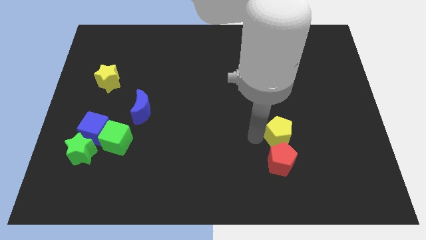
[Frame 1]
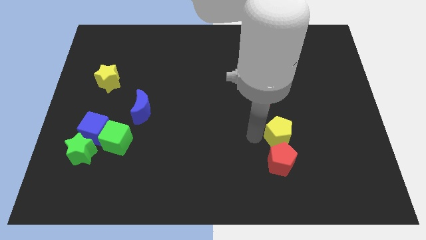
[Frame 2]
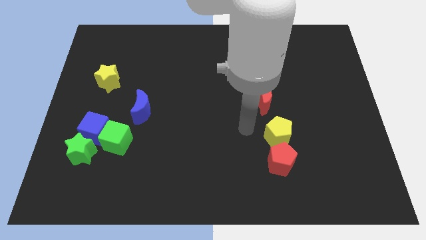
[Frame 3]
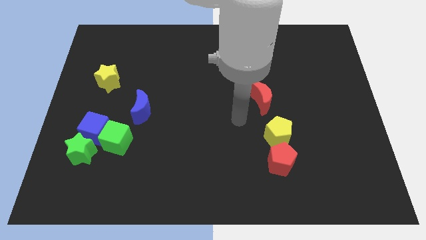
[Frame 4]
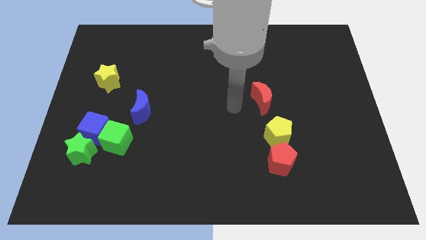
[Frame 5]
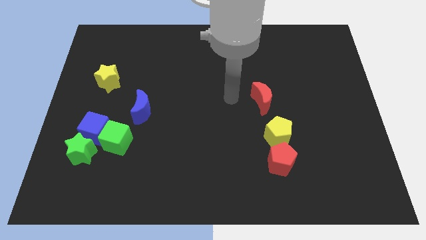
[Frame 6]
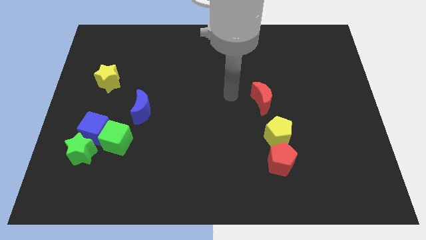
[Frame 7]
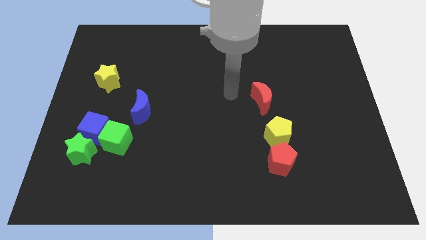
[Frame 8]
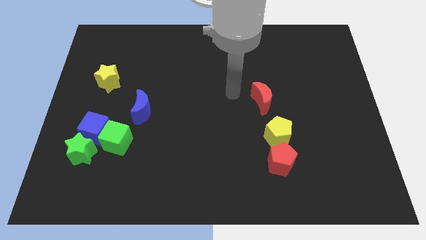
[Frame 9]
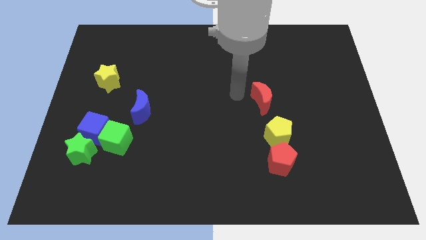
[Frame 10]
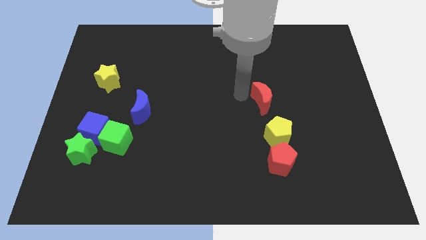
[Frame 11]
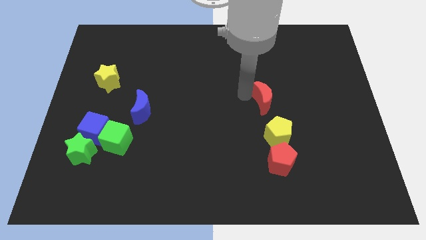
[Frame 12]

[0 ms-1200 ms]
move your arm towards red crescent

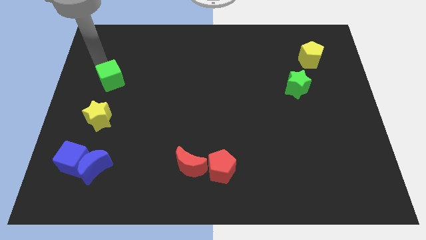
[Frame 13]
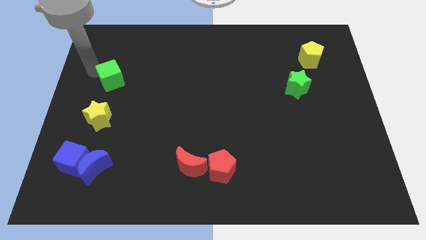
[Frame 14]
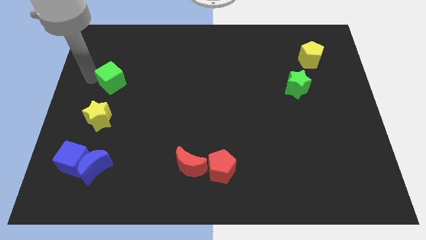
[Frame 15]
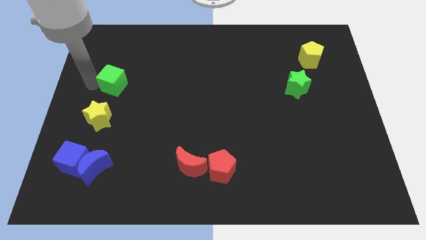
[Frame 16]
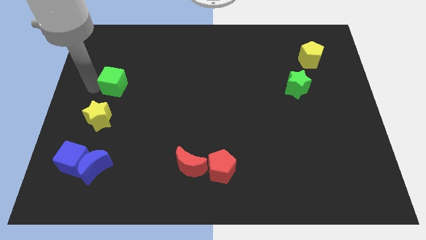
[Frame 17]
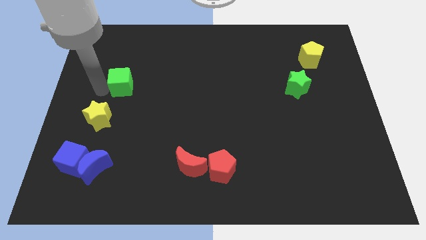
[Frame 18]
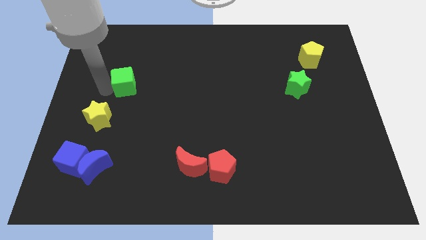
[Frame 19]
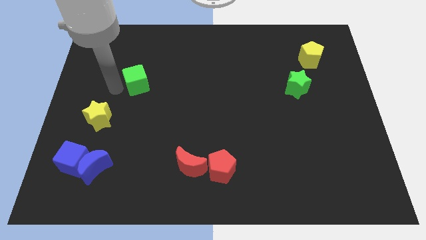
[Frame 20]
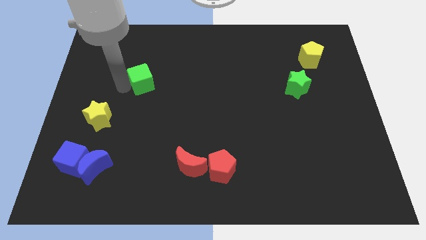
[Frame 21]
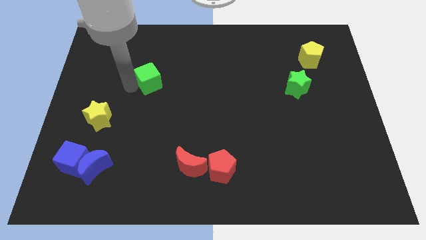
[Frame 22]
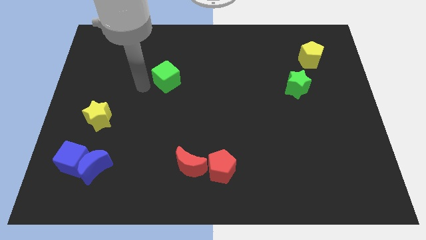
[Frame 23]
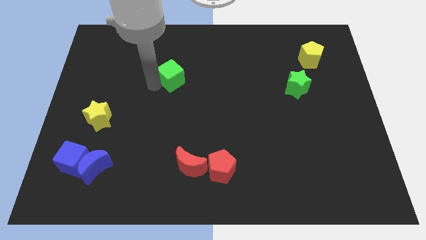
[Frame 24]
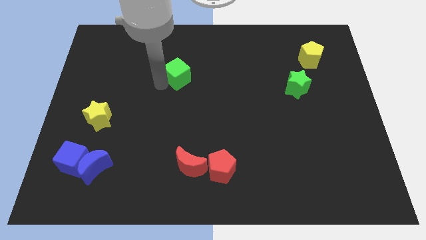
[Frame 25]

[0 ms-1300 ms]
push the green cube towards the center of the board

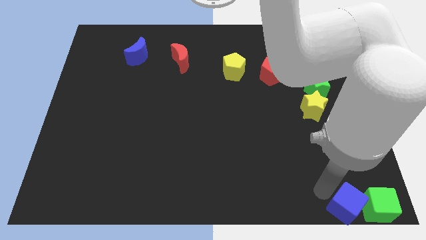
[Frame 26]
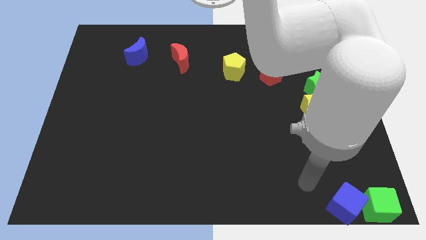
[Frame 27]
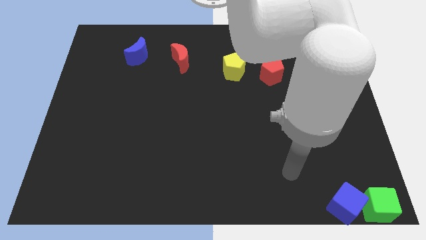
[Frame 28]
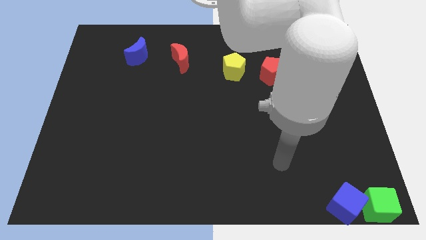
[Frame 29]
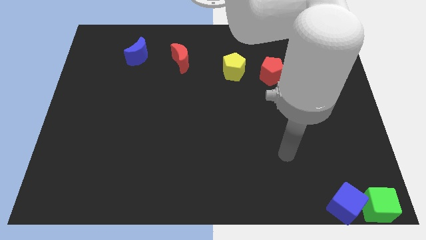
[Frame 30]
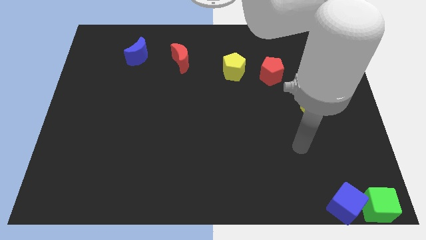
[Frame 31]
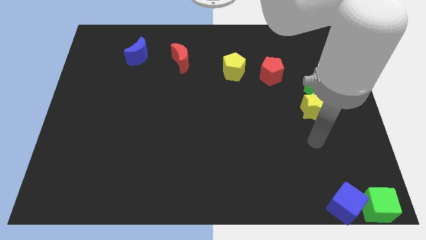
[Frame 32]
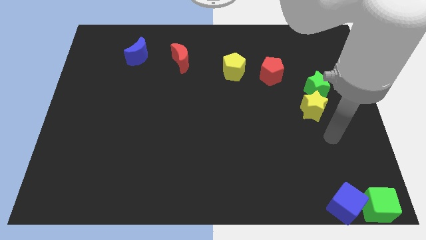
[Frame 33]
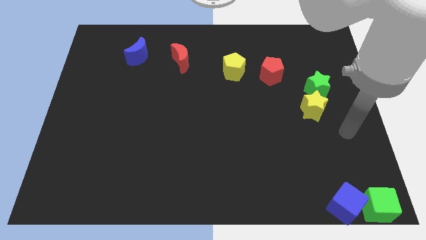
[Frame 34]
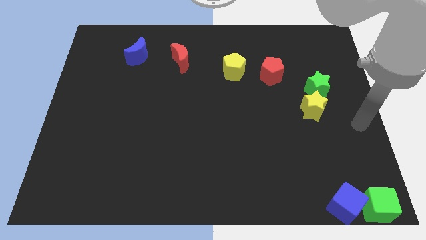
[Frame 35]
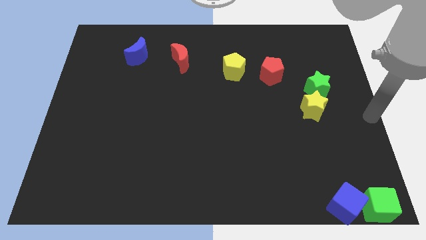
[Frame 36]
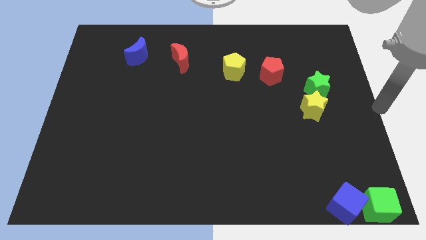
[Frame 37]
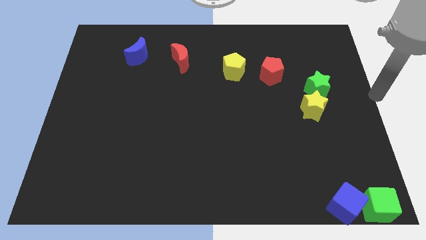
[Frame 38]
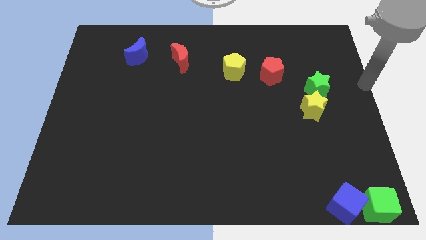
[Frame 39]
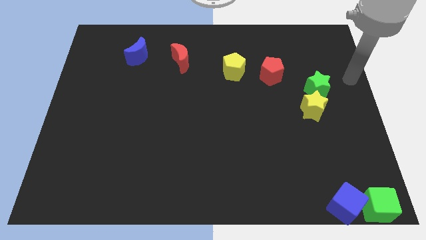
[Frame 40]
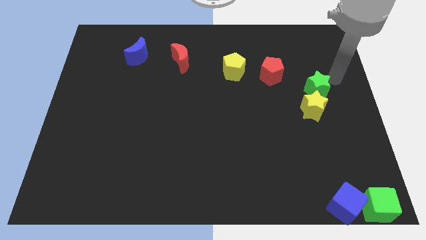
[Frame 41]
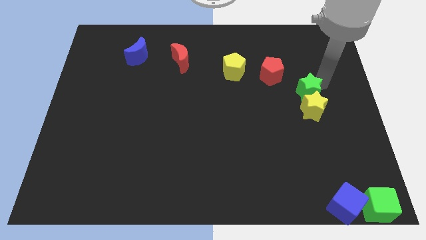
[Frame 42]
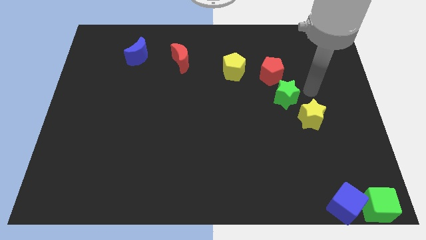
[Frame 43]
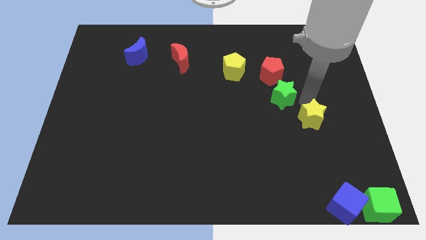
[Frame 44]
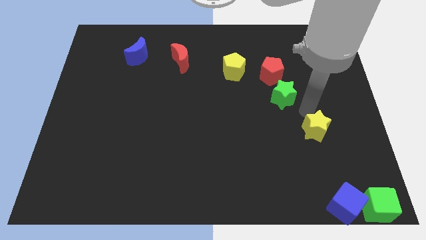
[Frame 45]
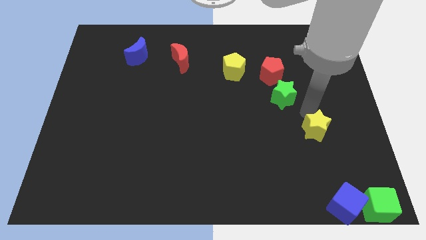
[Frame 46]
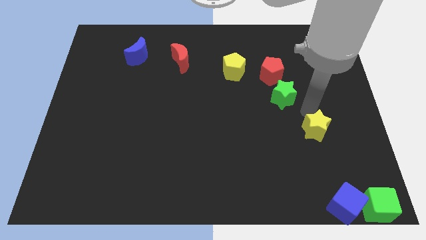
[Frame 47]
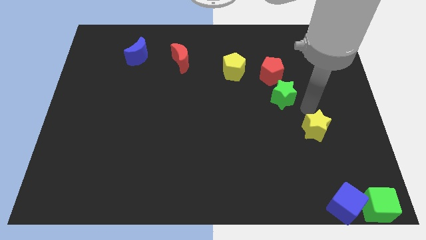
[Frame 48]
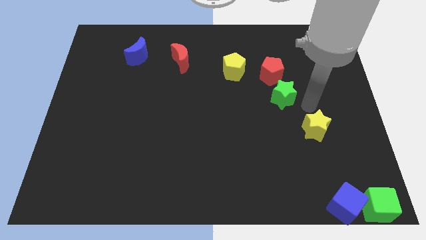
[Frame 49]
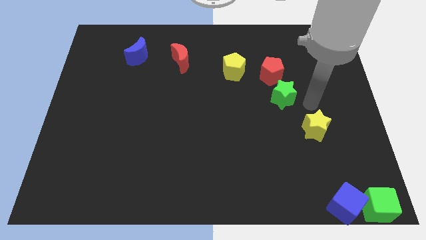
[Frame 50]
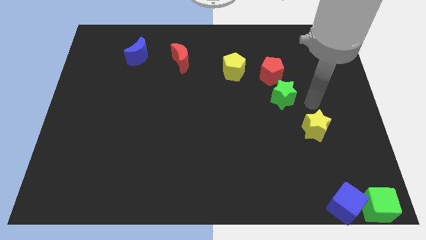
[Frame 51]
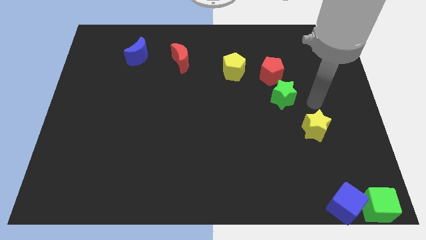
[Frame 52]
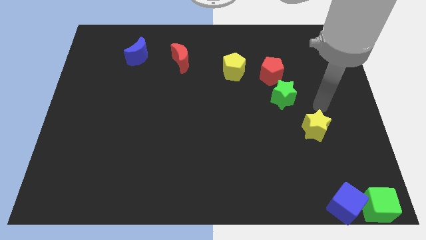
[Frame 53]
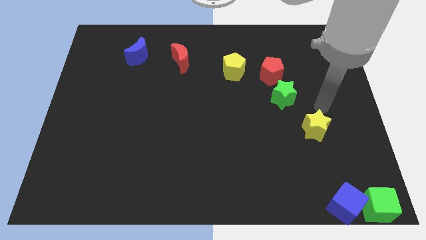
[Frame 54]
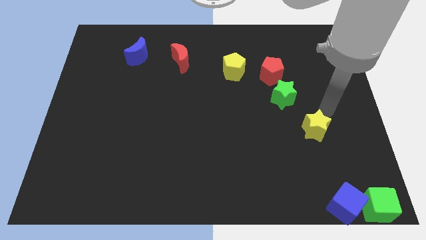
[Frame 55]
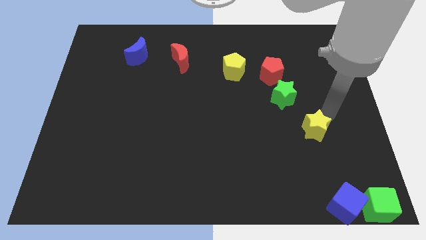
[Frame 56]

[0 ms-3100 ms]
move the yellow star away from the green star

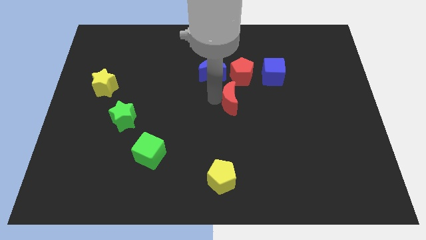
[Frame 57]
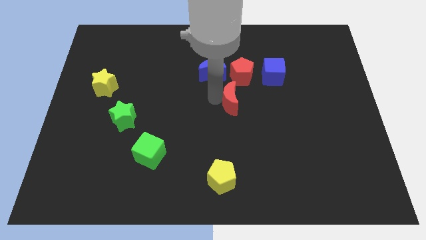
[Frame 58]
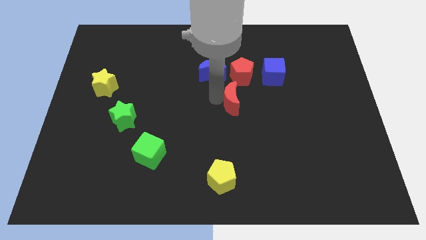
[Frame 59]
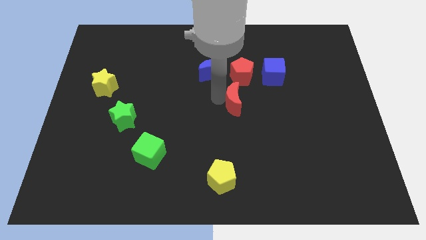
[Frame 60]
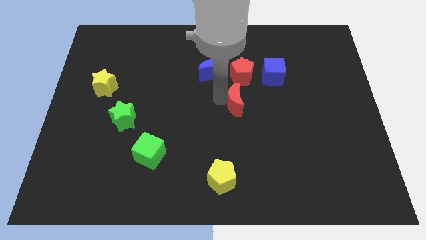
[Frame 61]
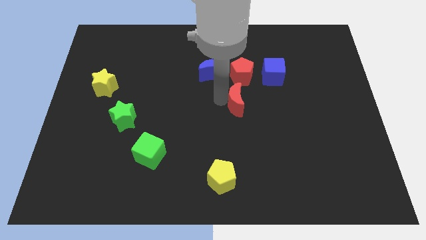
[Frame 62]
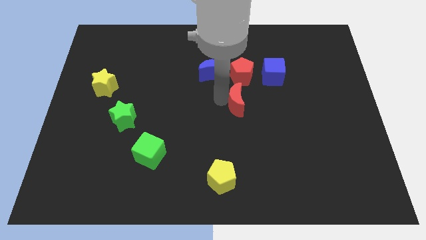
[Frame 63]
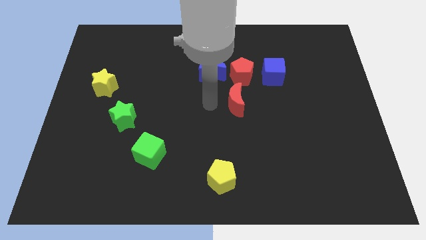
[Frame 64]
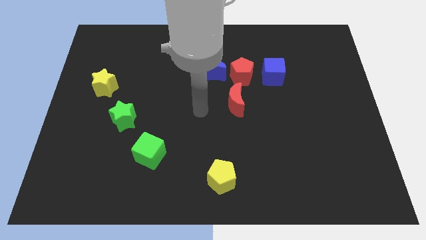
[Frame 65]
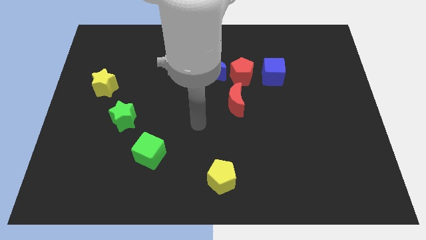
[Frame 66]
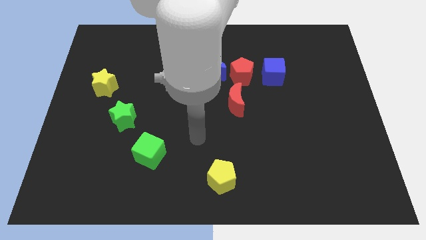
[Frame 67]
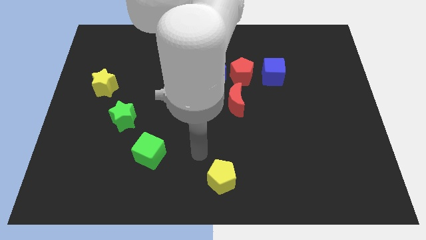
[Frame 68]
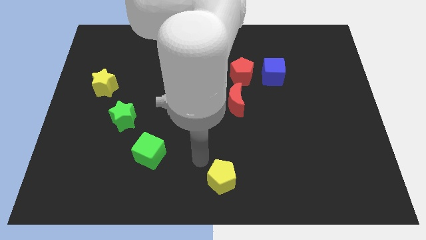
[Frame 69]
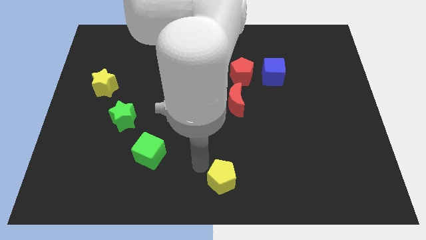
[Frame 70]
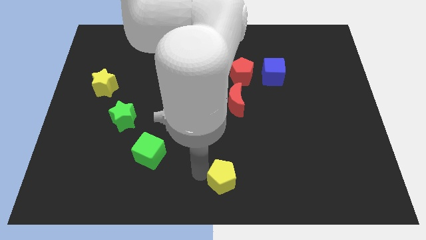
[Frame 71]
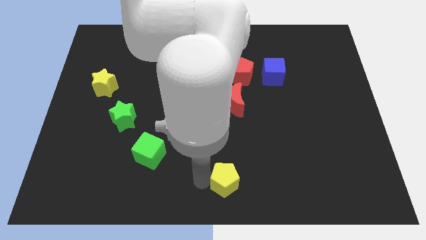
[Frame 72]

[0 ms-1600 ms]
move the red crescent to the bottom of the red pentagon

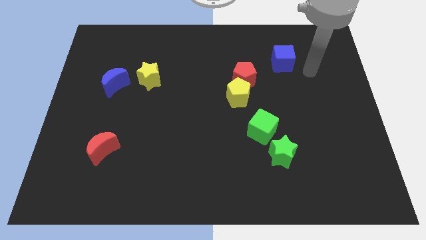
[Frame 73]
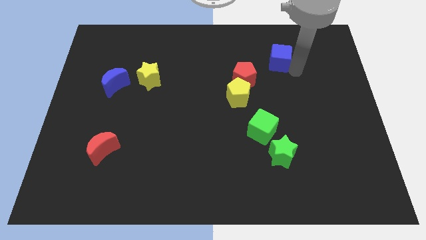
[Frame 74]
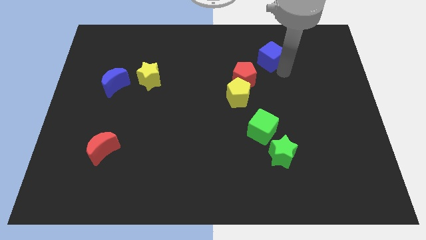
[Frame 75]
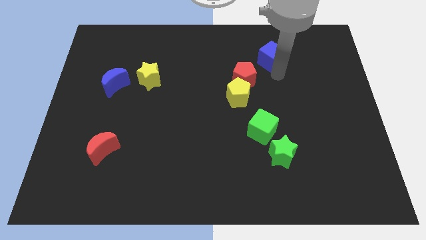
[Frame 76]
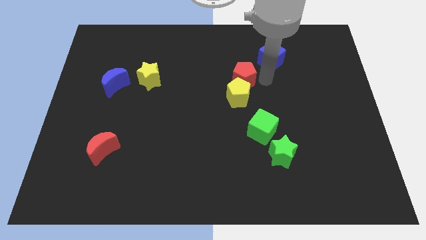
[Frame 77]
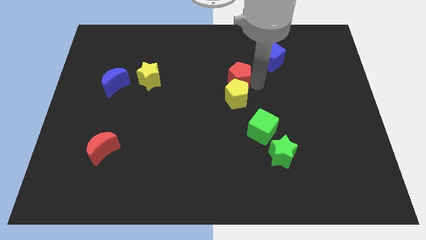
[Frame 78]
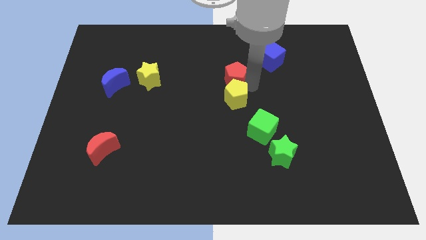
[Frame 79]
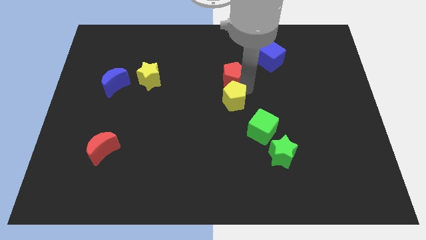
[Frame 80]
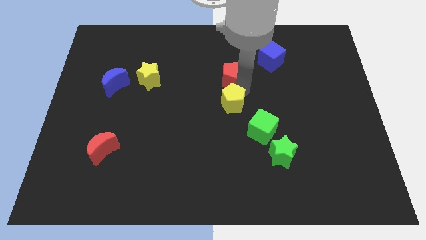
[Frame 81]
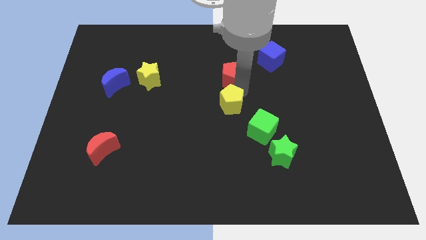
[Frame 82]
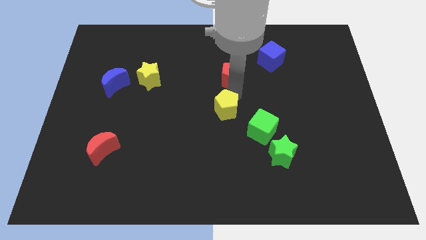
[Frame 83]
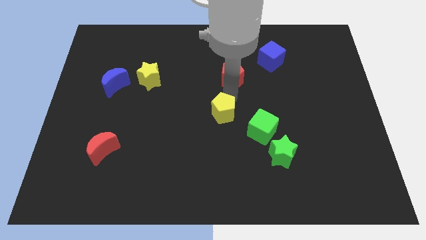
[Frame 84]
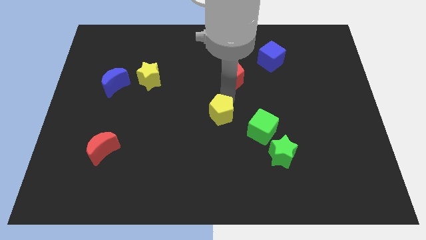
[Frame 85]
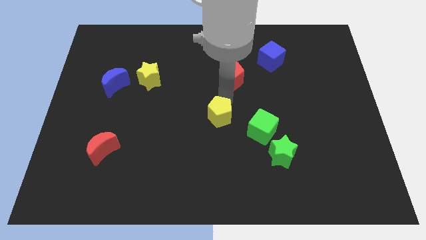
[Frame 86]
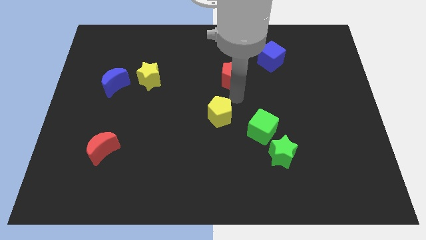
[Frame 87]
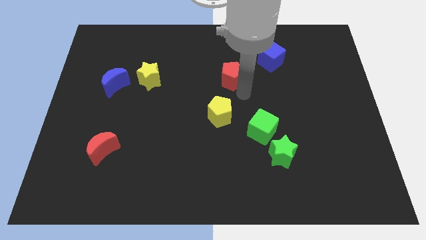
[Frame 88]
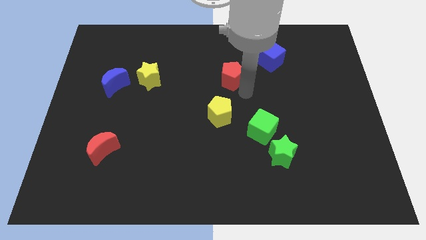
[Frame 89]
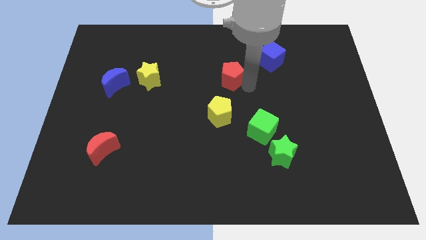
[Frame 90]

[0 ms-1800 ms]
separate the yellow pentagon from the red pentagon
